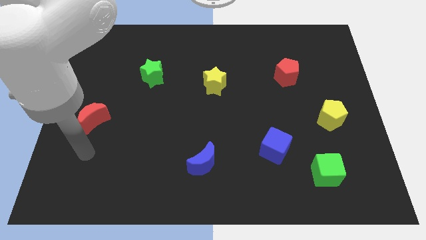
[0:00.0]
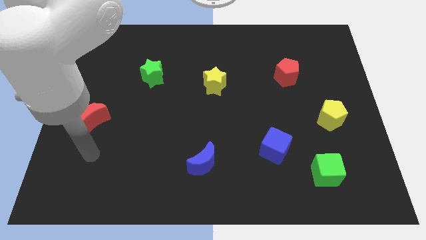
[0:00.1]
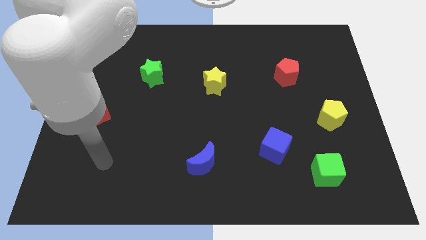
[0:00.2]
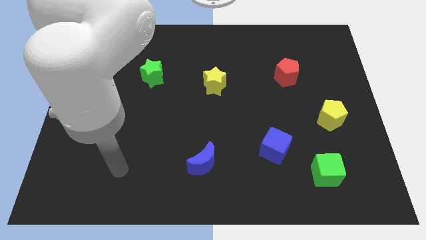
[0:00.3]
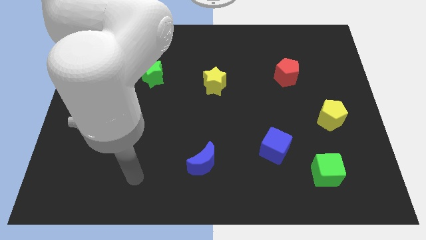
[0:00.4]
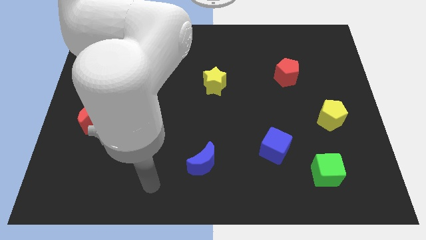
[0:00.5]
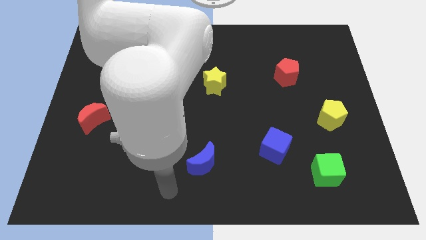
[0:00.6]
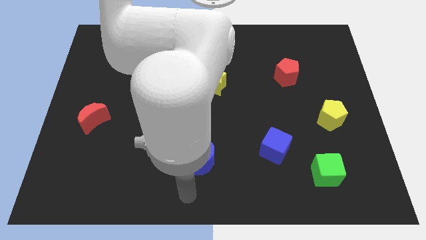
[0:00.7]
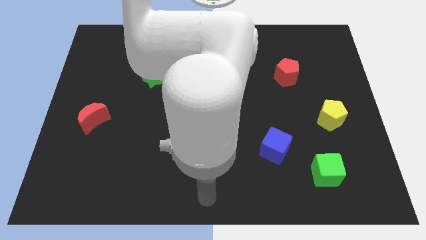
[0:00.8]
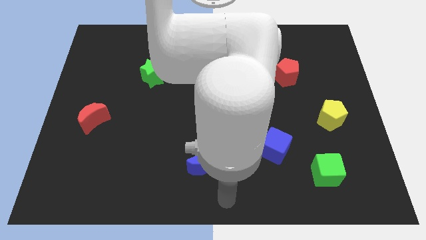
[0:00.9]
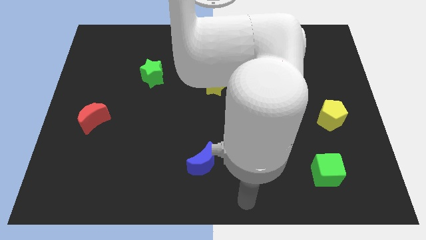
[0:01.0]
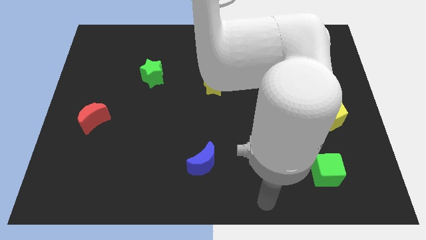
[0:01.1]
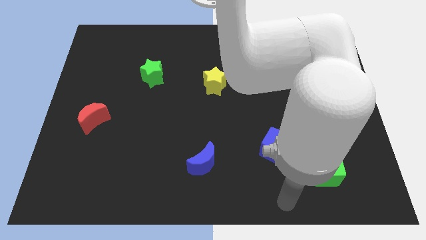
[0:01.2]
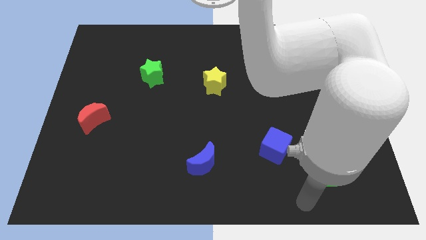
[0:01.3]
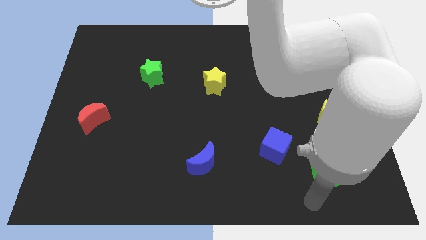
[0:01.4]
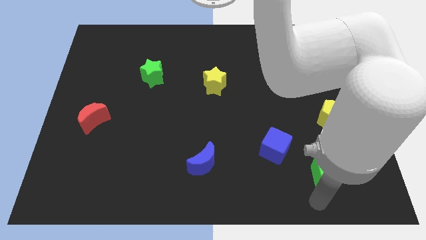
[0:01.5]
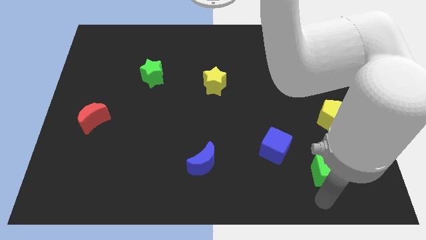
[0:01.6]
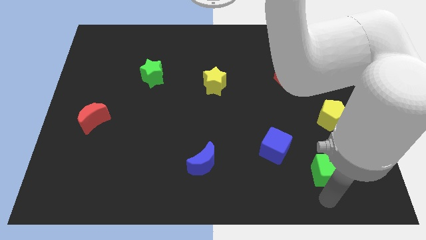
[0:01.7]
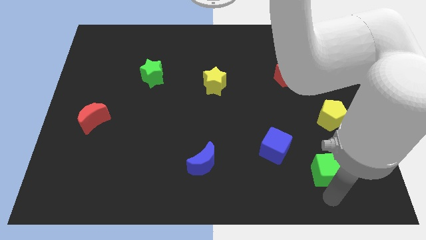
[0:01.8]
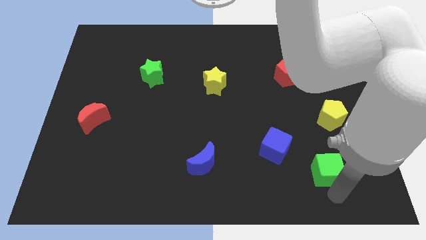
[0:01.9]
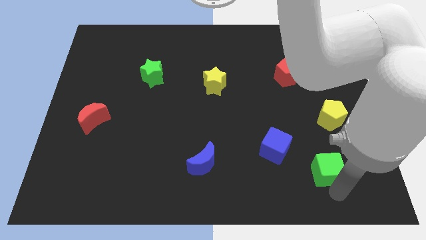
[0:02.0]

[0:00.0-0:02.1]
move your arm to the bottom of the green cube

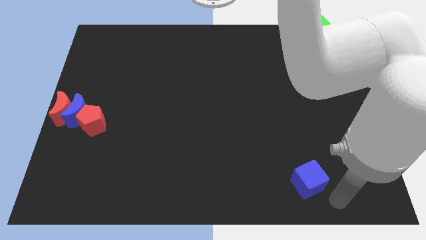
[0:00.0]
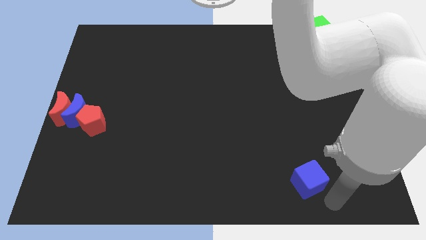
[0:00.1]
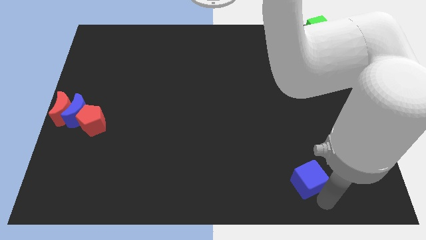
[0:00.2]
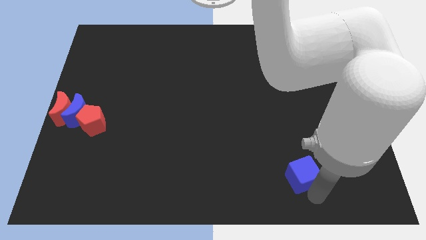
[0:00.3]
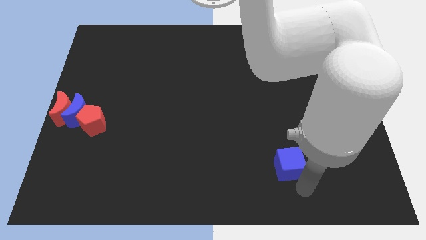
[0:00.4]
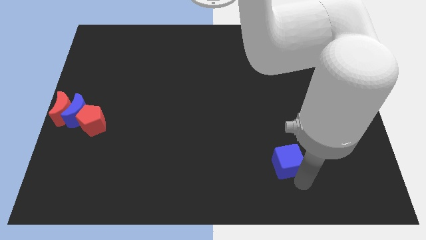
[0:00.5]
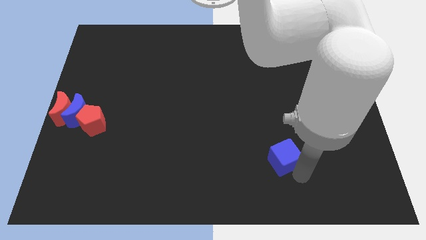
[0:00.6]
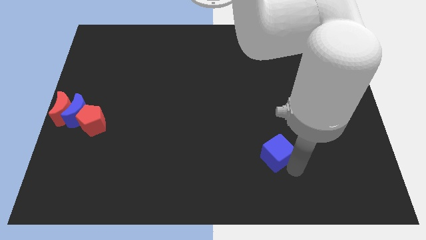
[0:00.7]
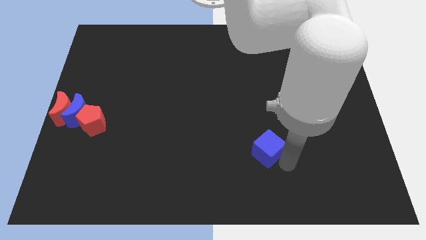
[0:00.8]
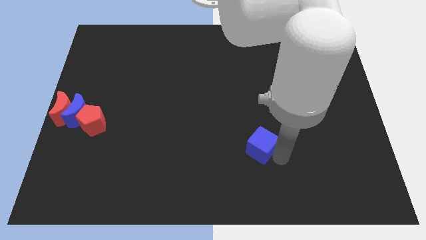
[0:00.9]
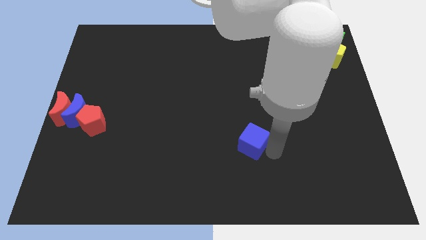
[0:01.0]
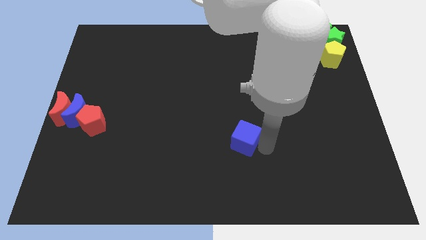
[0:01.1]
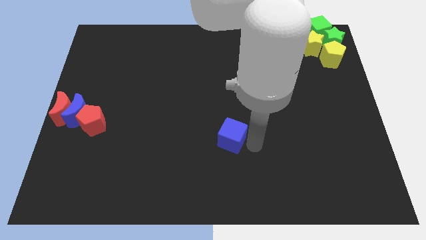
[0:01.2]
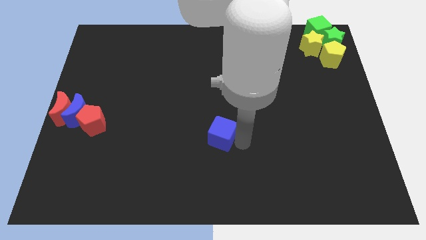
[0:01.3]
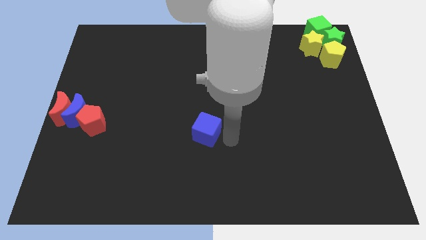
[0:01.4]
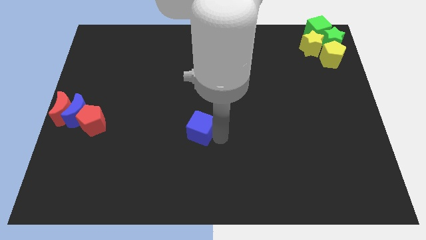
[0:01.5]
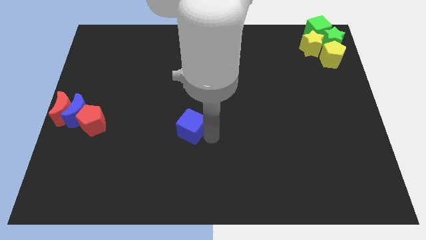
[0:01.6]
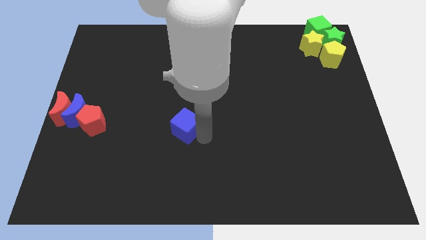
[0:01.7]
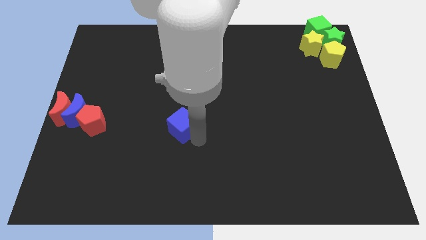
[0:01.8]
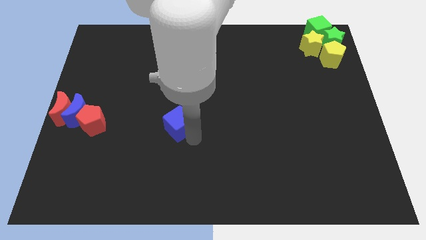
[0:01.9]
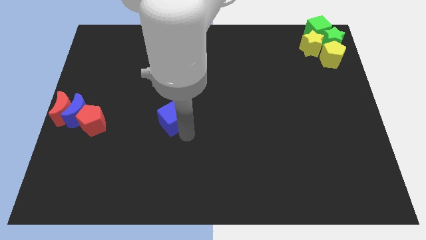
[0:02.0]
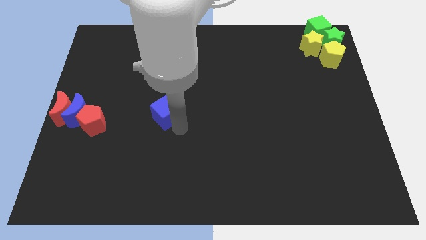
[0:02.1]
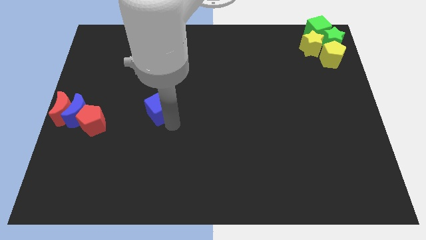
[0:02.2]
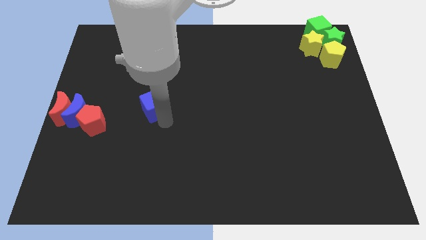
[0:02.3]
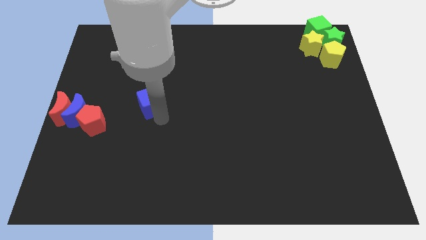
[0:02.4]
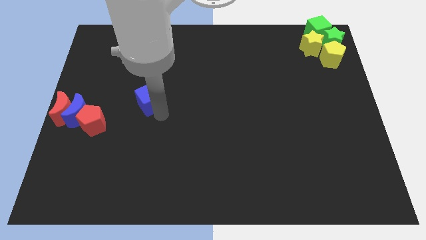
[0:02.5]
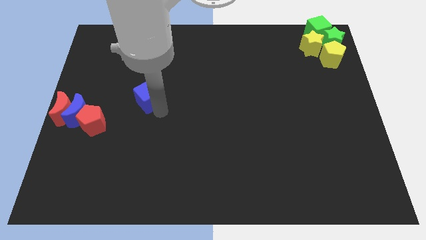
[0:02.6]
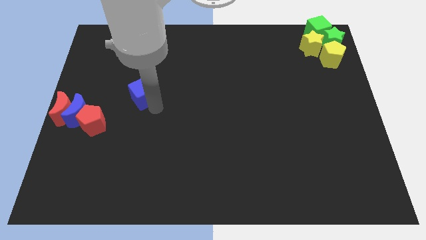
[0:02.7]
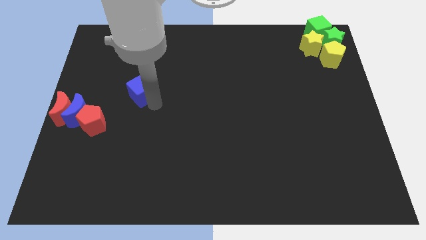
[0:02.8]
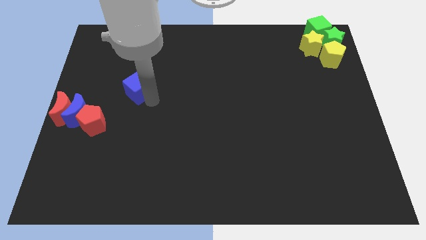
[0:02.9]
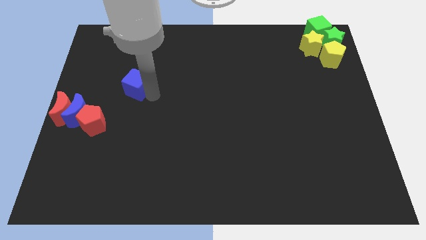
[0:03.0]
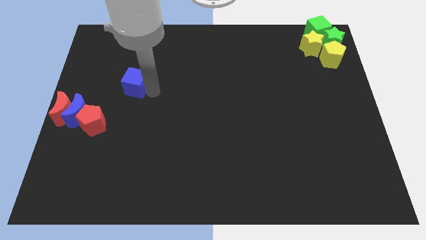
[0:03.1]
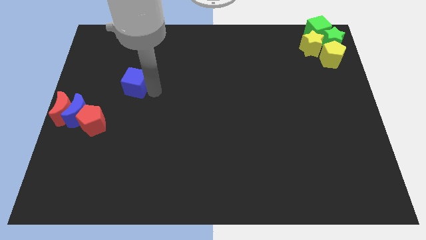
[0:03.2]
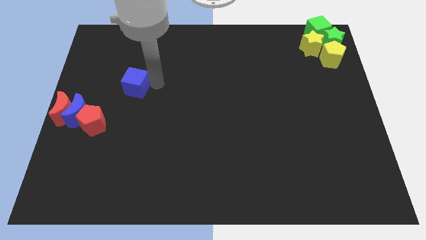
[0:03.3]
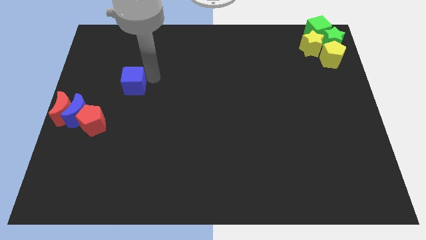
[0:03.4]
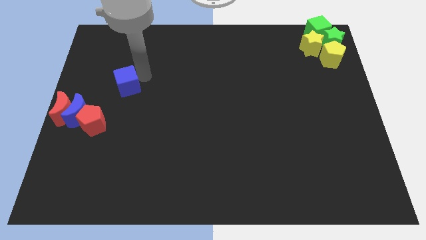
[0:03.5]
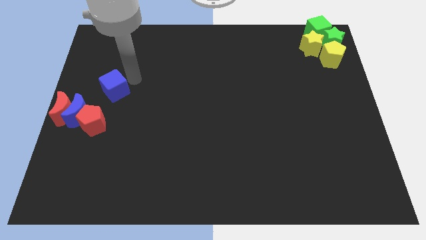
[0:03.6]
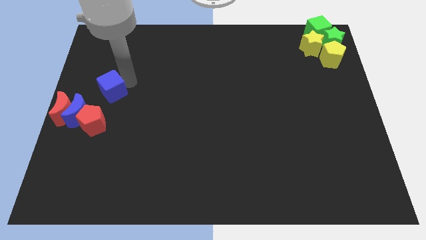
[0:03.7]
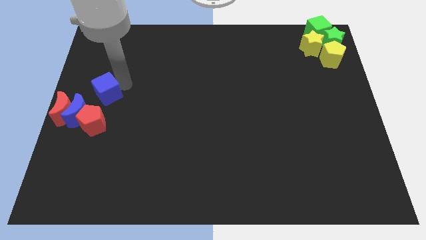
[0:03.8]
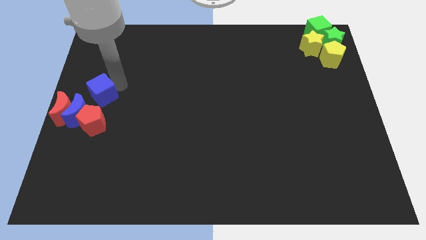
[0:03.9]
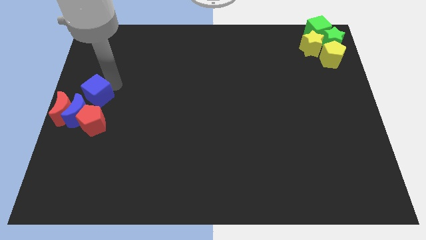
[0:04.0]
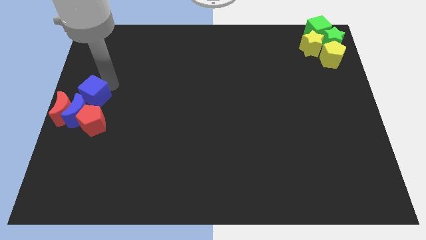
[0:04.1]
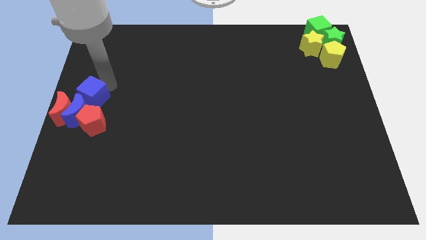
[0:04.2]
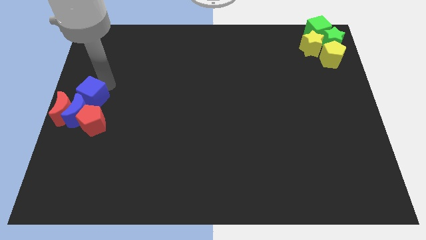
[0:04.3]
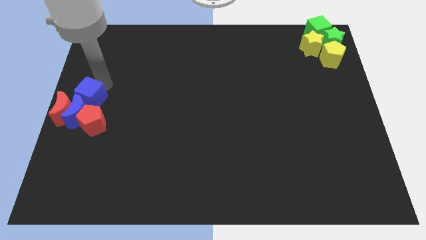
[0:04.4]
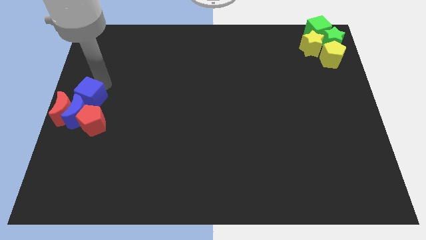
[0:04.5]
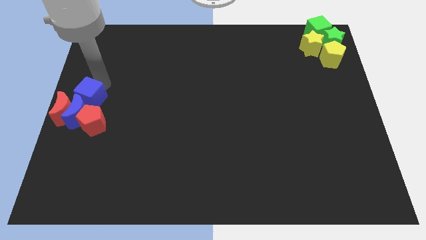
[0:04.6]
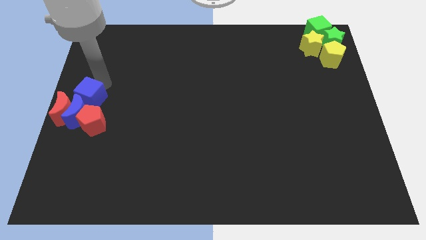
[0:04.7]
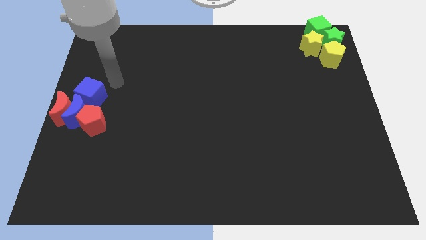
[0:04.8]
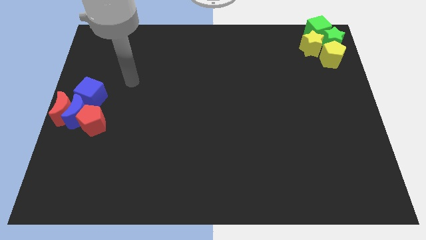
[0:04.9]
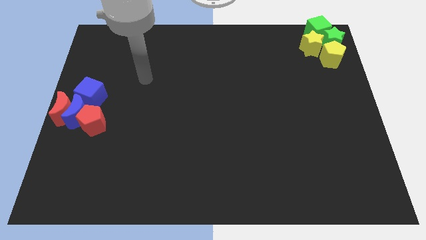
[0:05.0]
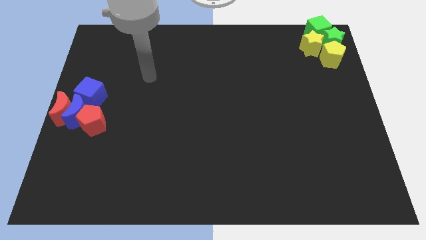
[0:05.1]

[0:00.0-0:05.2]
drag the blue cube beside the blue crescent

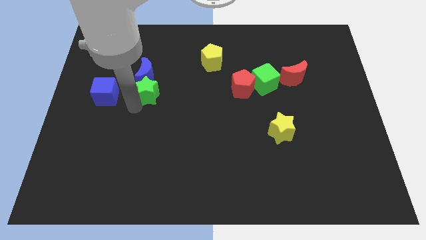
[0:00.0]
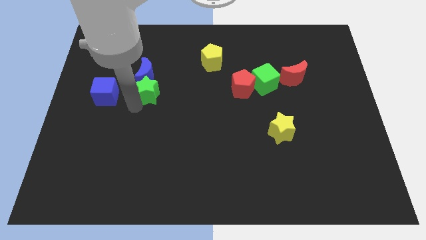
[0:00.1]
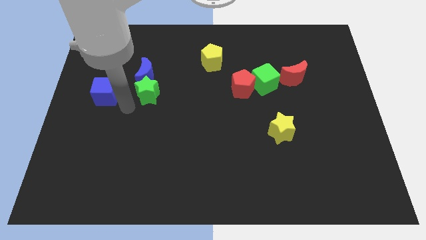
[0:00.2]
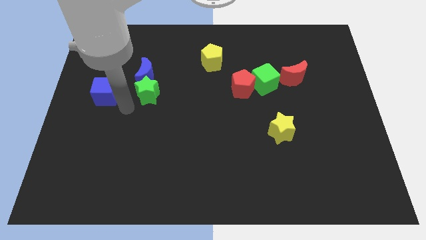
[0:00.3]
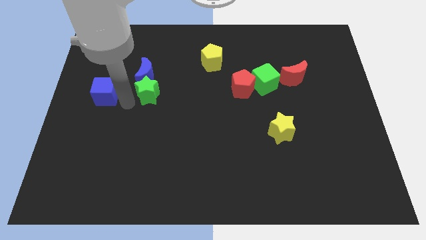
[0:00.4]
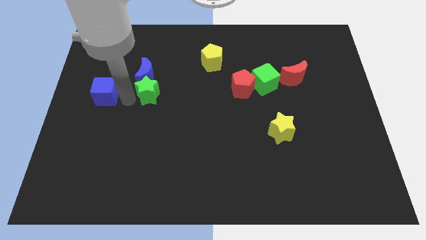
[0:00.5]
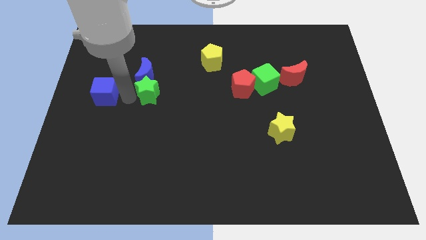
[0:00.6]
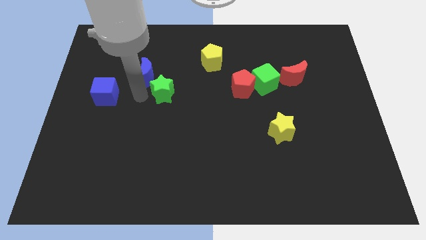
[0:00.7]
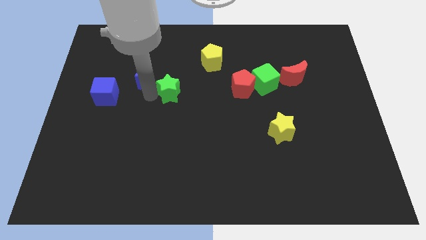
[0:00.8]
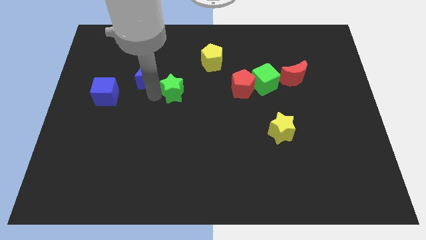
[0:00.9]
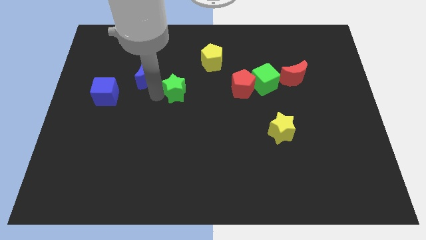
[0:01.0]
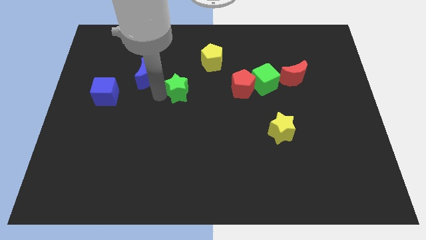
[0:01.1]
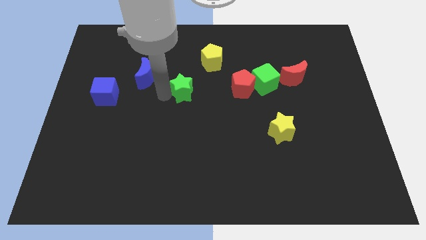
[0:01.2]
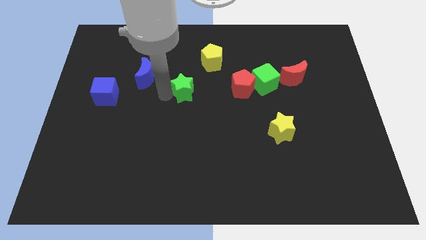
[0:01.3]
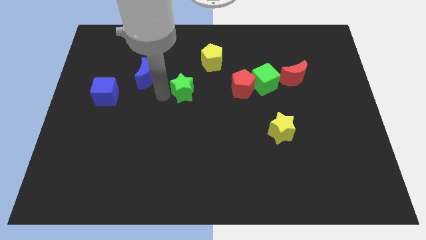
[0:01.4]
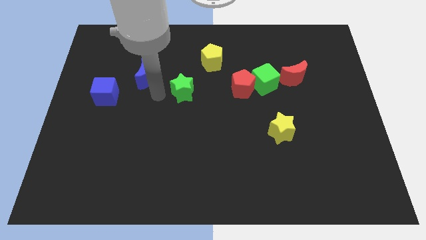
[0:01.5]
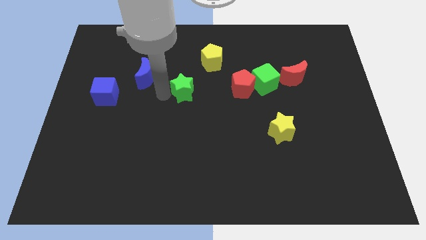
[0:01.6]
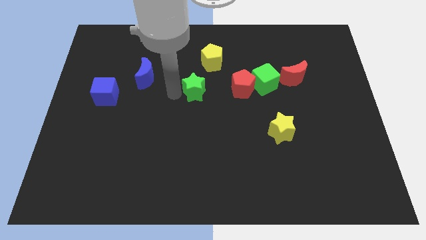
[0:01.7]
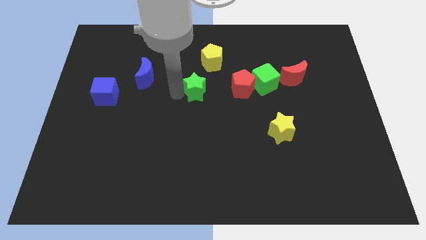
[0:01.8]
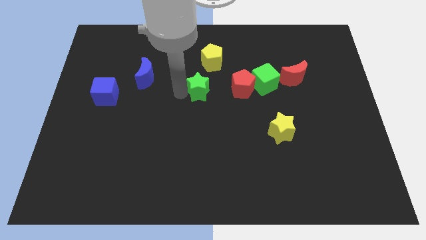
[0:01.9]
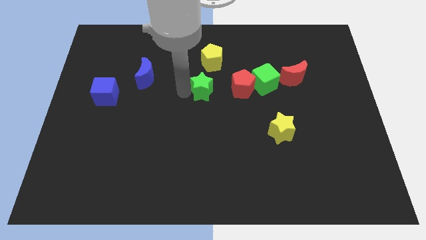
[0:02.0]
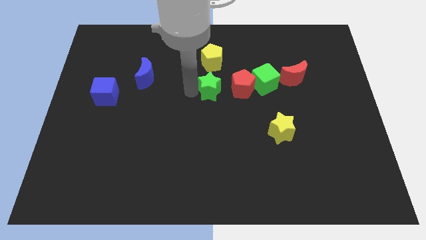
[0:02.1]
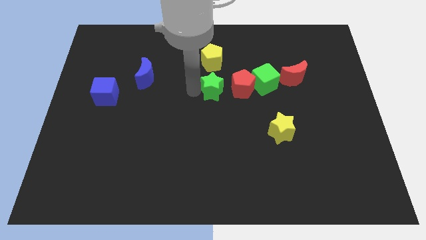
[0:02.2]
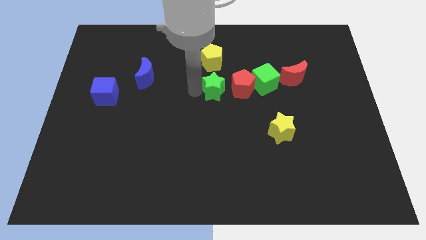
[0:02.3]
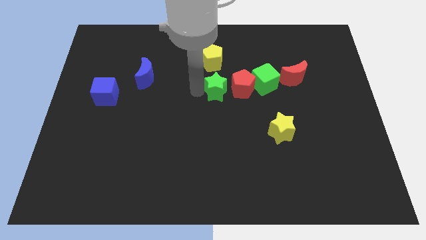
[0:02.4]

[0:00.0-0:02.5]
push the green star left to the red pentagon
